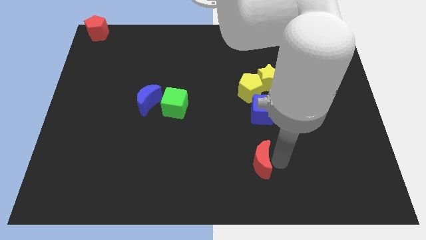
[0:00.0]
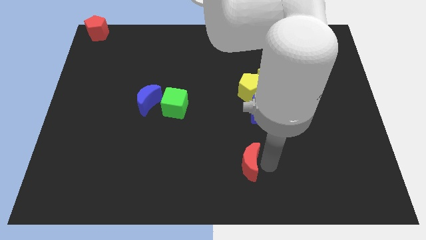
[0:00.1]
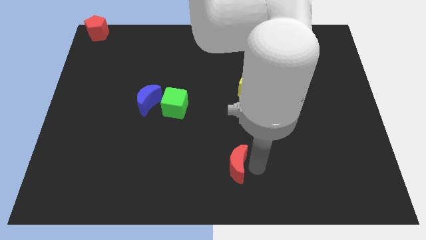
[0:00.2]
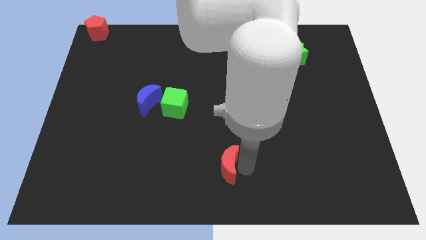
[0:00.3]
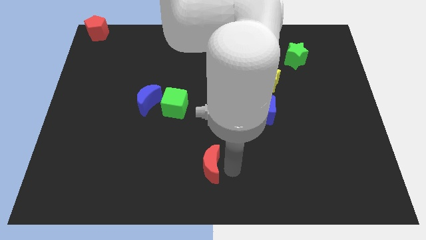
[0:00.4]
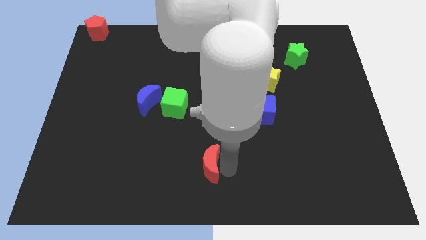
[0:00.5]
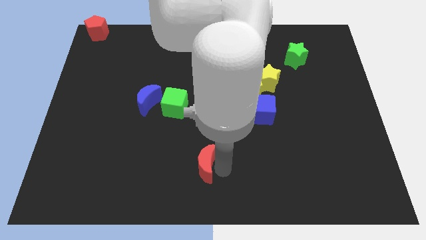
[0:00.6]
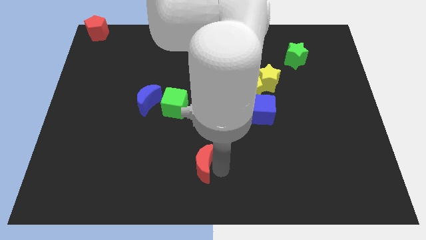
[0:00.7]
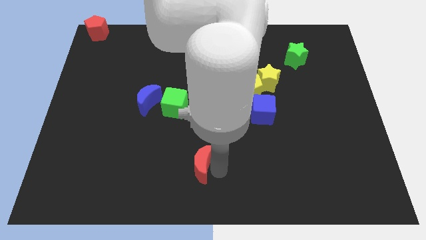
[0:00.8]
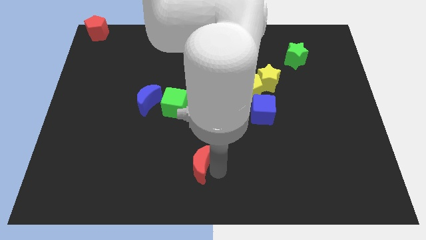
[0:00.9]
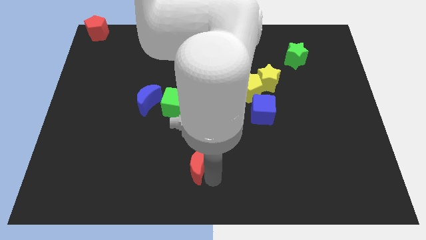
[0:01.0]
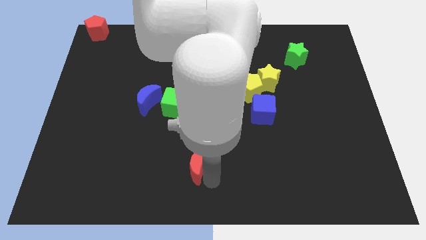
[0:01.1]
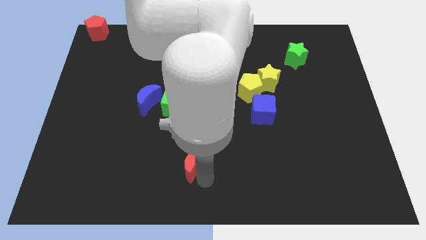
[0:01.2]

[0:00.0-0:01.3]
move the red crescent to the left of the board

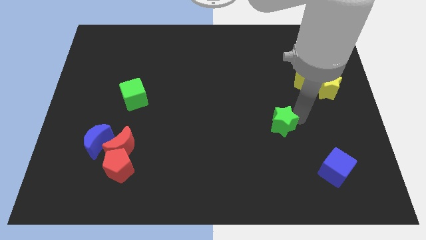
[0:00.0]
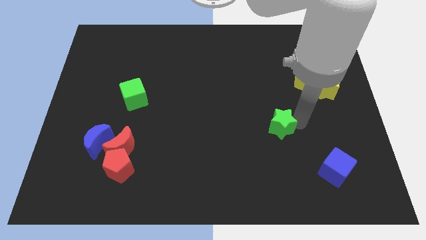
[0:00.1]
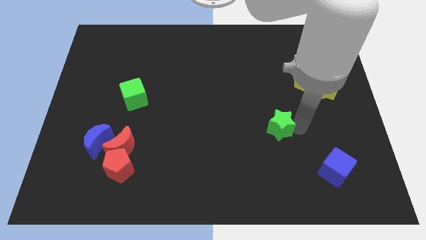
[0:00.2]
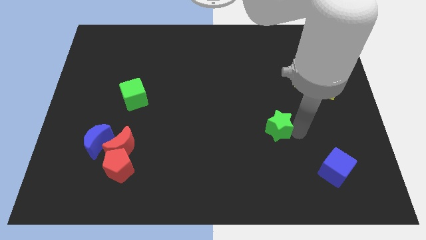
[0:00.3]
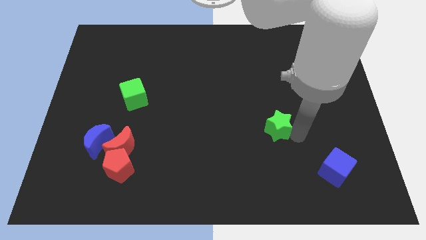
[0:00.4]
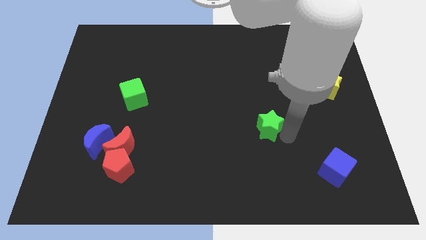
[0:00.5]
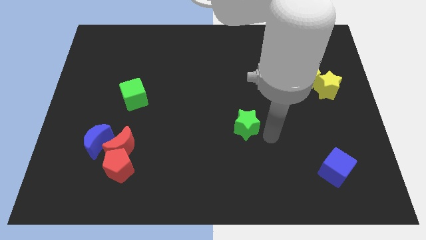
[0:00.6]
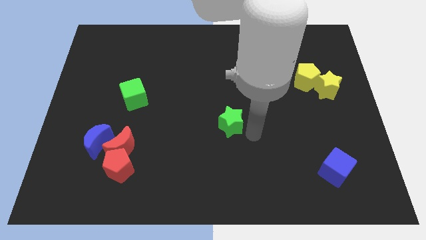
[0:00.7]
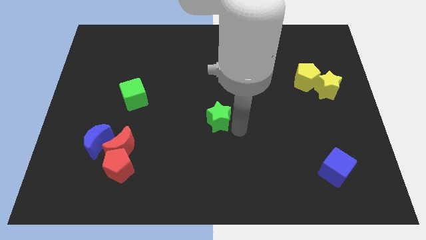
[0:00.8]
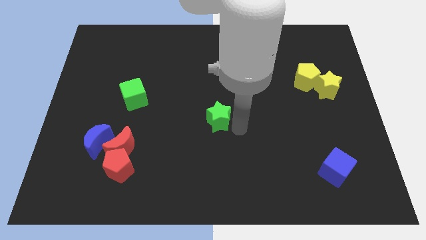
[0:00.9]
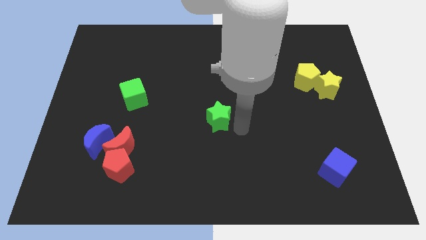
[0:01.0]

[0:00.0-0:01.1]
push the green star to the center of the board

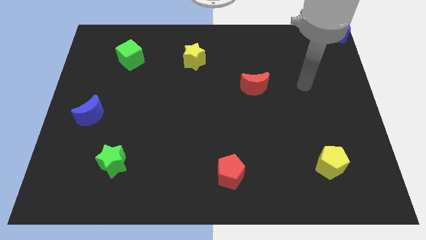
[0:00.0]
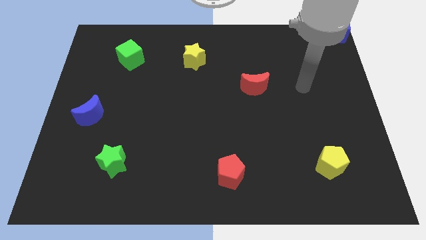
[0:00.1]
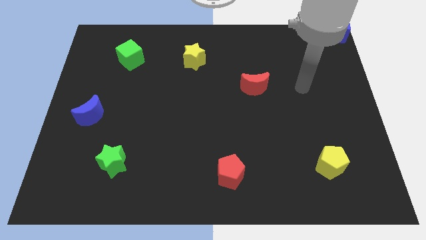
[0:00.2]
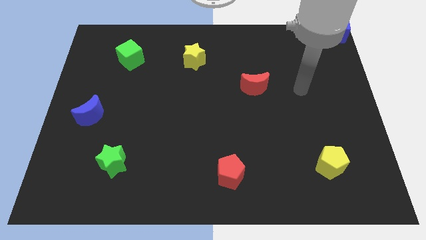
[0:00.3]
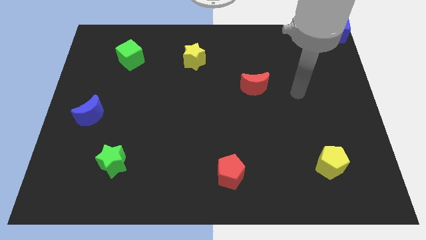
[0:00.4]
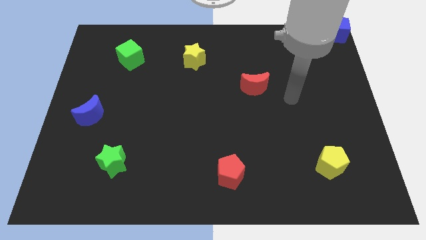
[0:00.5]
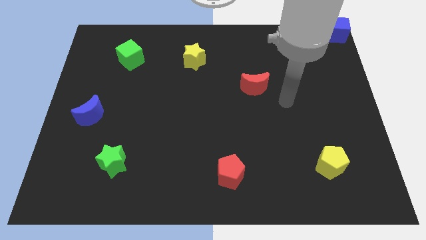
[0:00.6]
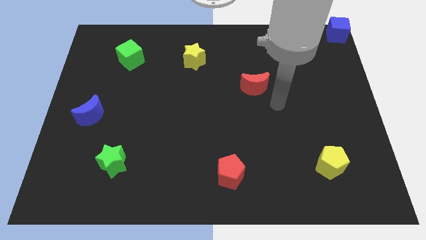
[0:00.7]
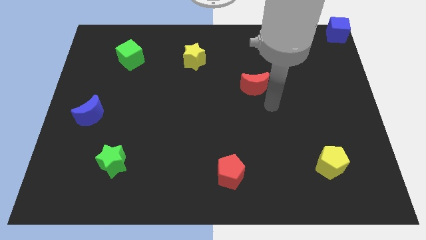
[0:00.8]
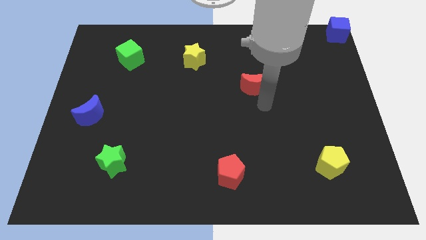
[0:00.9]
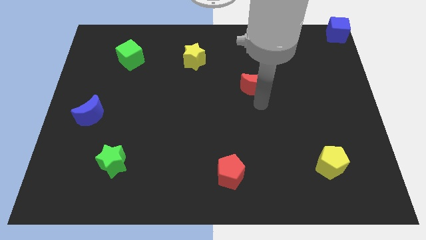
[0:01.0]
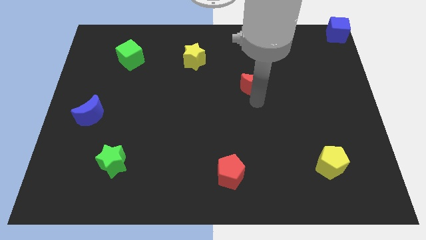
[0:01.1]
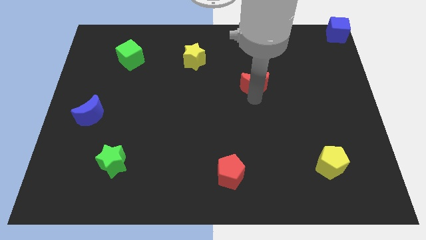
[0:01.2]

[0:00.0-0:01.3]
place the arm below the red moon

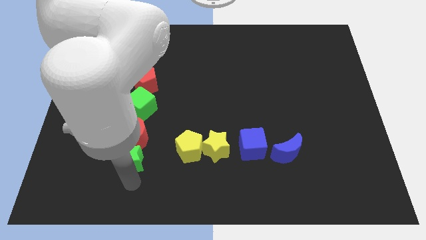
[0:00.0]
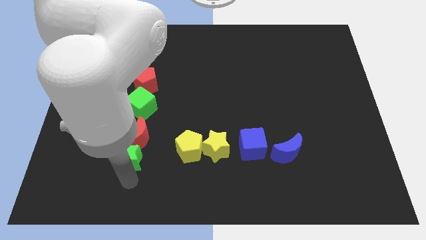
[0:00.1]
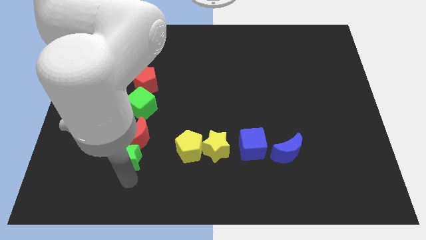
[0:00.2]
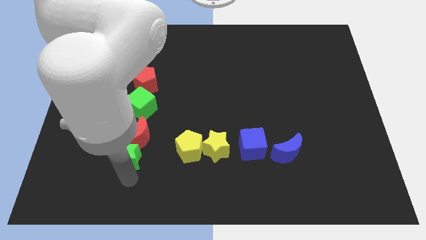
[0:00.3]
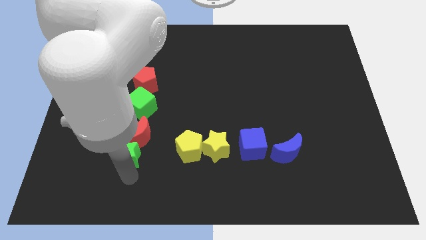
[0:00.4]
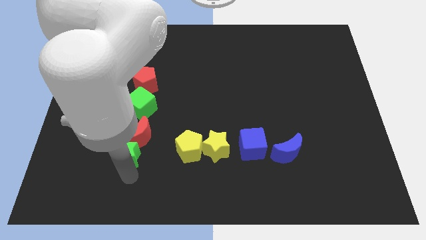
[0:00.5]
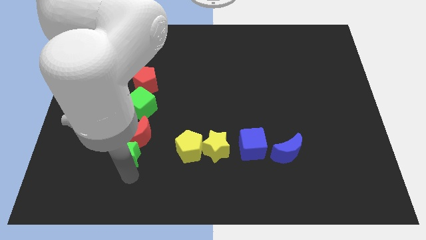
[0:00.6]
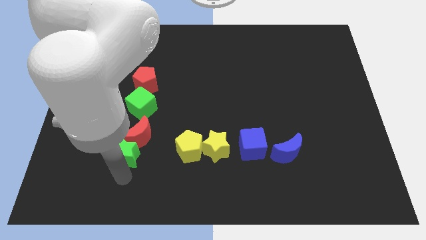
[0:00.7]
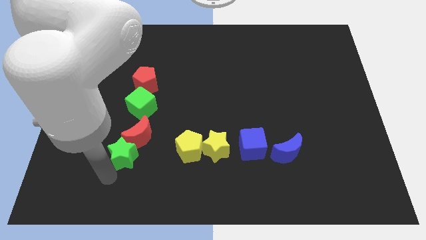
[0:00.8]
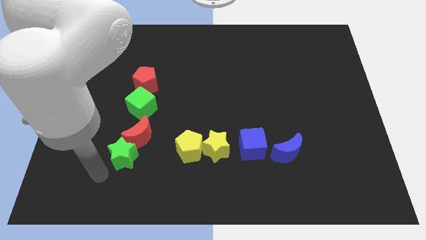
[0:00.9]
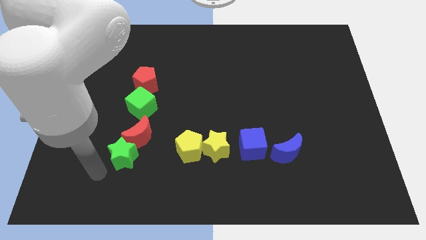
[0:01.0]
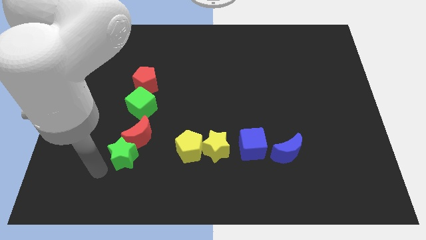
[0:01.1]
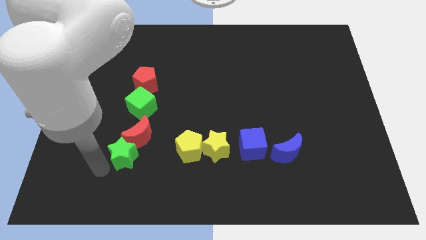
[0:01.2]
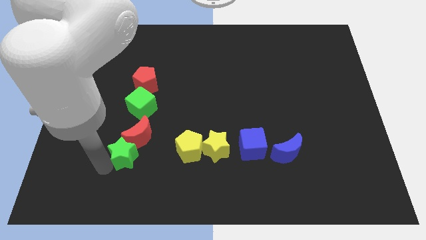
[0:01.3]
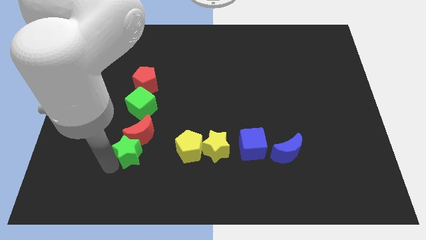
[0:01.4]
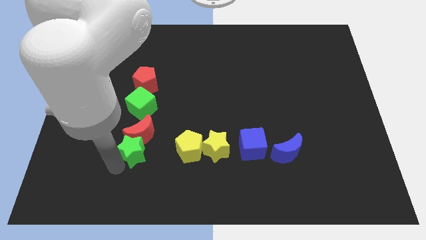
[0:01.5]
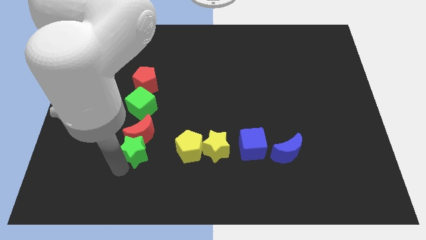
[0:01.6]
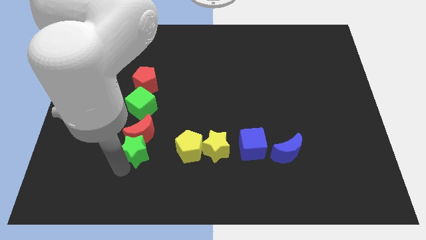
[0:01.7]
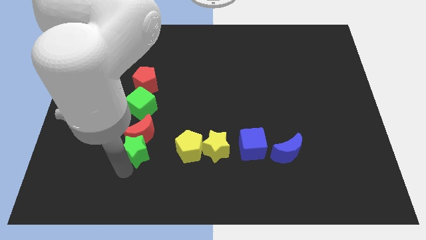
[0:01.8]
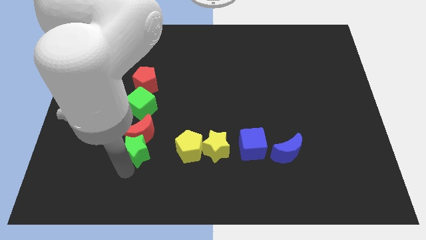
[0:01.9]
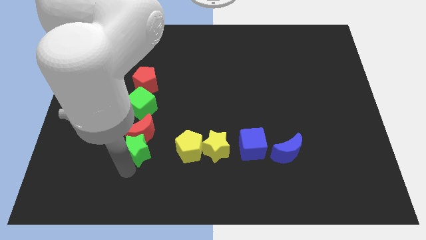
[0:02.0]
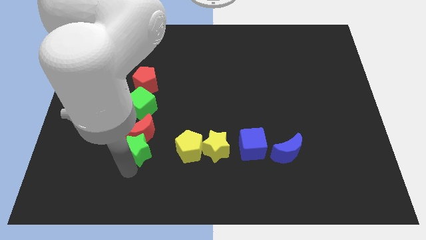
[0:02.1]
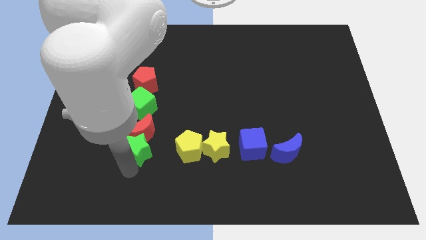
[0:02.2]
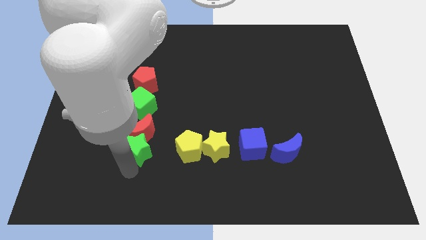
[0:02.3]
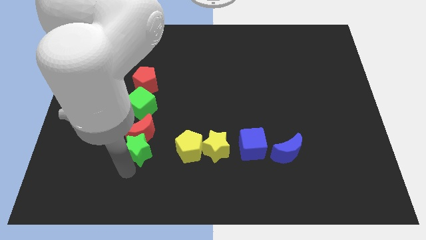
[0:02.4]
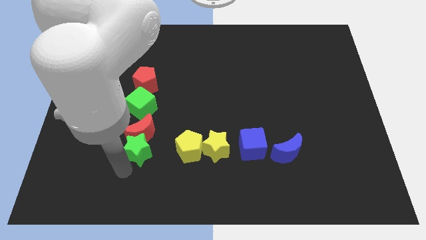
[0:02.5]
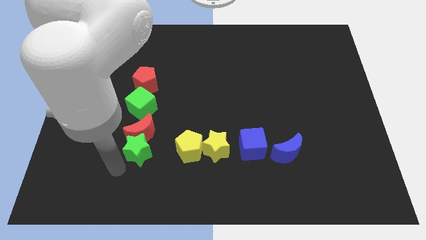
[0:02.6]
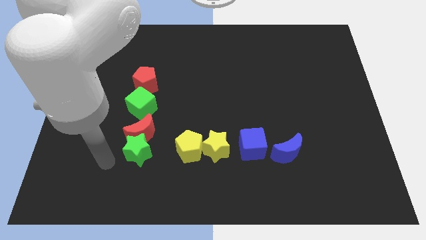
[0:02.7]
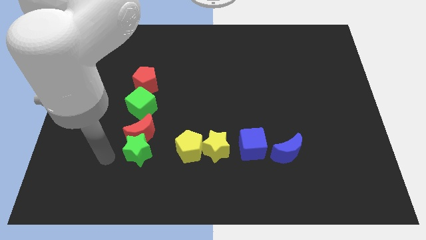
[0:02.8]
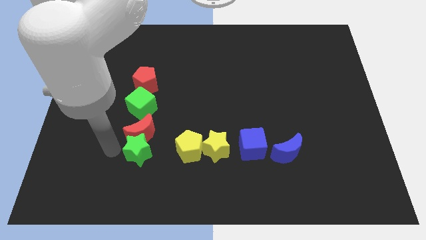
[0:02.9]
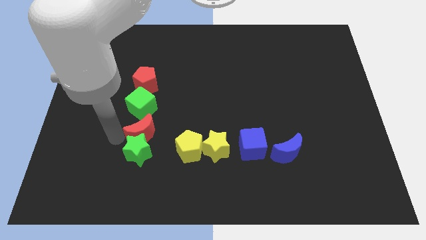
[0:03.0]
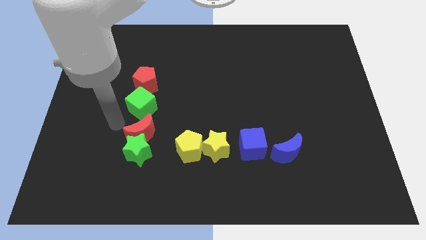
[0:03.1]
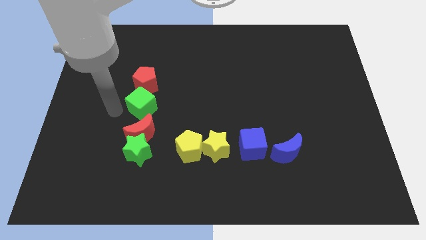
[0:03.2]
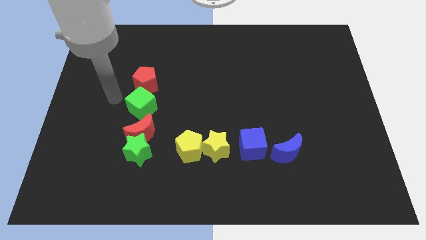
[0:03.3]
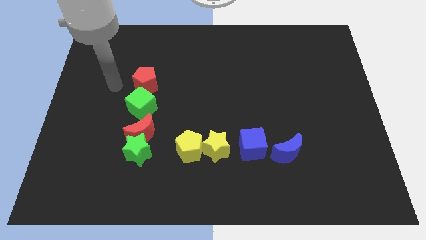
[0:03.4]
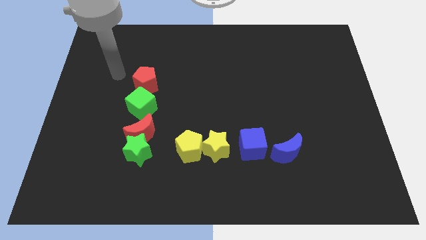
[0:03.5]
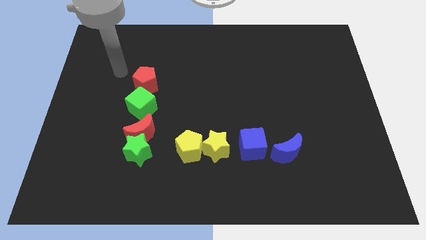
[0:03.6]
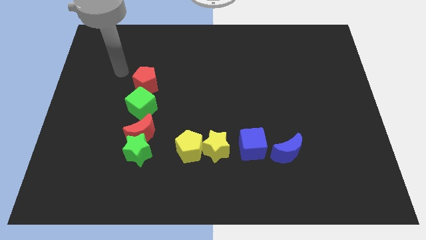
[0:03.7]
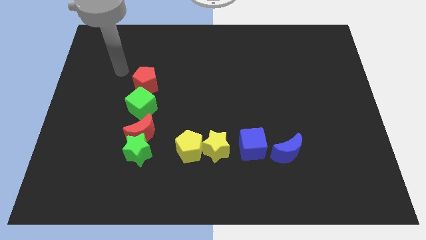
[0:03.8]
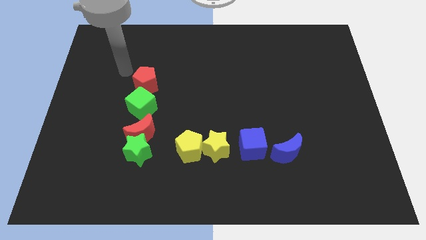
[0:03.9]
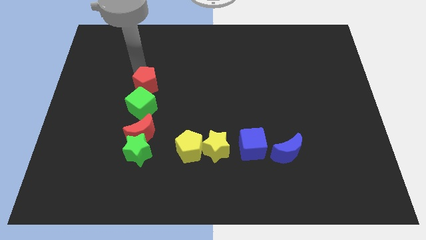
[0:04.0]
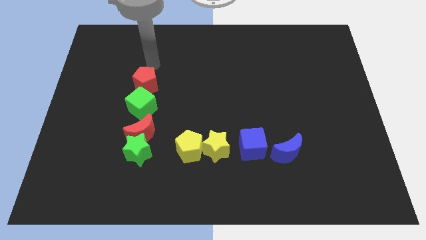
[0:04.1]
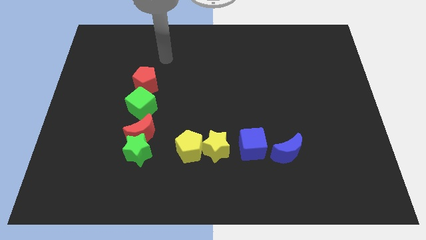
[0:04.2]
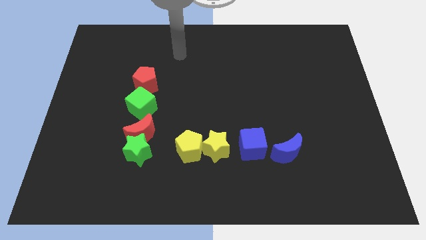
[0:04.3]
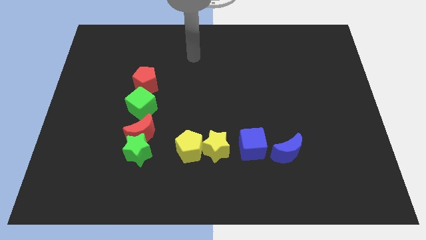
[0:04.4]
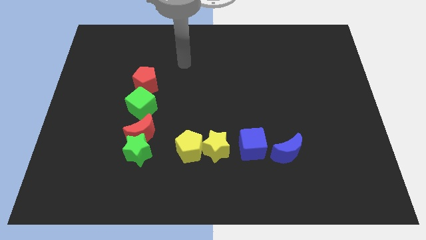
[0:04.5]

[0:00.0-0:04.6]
make a vertical line with the green star red crescent green cube and red pentagon

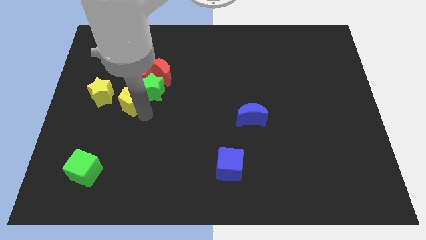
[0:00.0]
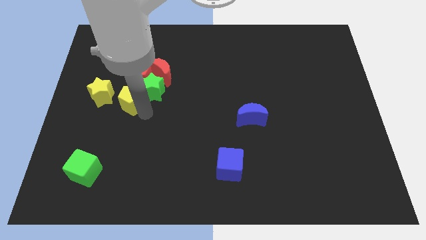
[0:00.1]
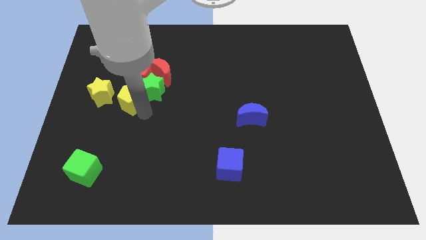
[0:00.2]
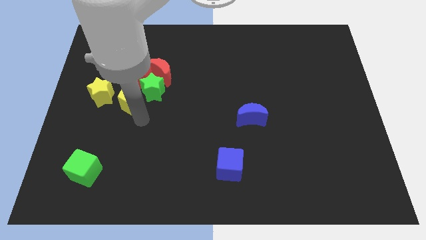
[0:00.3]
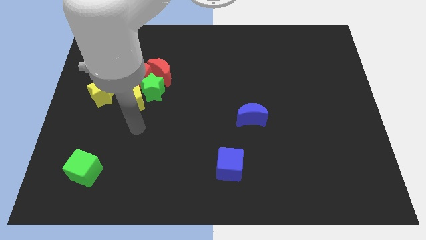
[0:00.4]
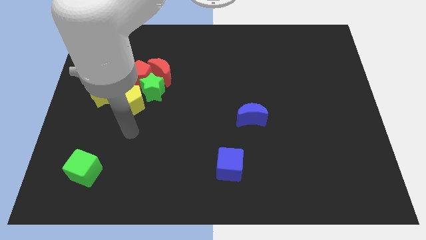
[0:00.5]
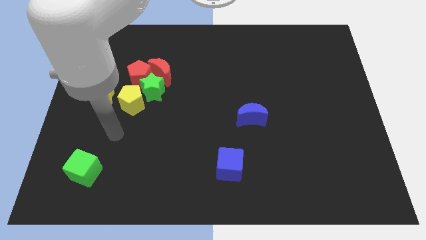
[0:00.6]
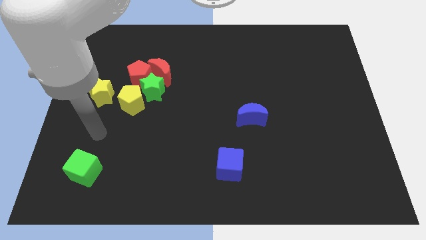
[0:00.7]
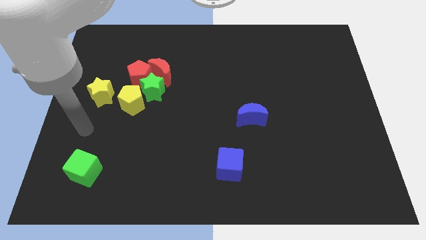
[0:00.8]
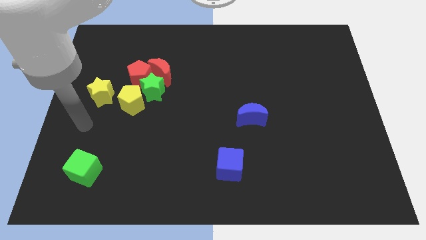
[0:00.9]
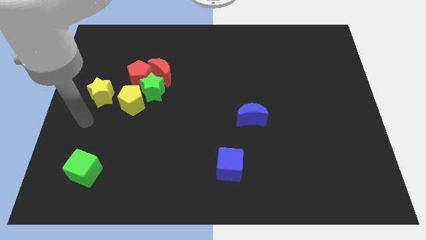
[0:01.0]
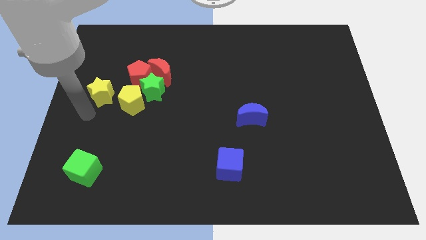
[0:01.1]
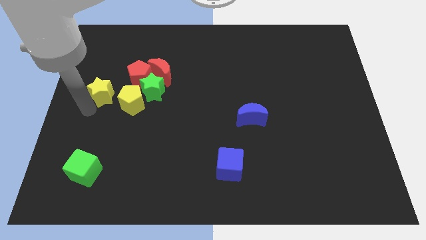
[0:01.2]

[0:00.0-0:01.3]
push the yellow pentagon in between green star and yellow star
